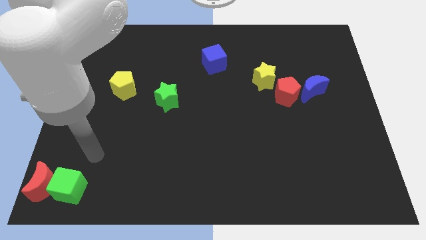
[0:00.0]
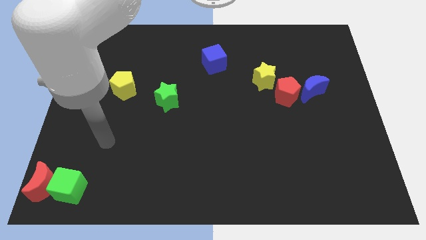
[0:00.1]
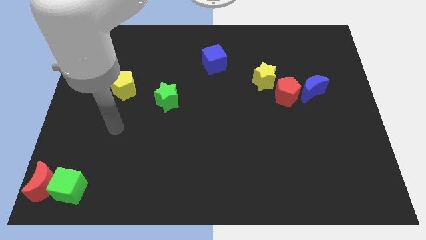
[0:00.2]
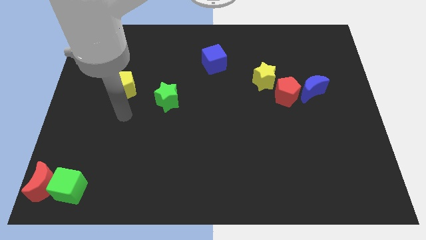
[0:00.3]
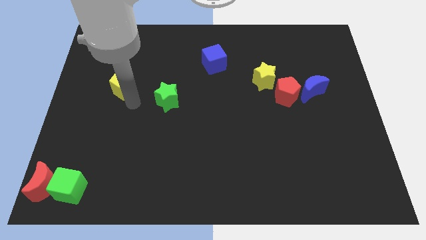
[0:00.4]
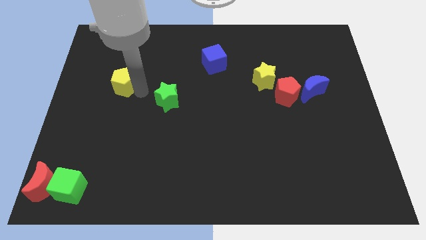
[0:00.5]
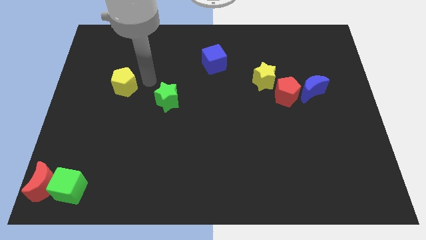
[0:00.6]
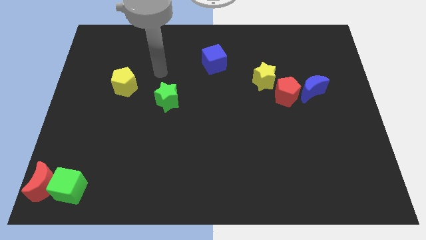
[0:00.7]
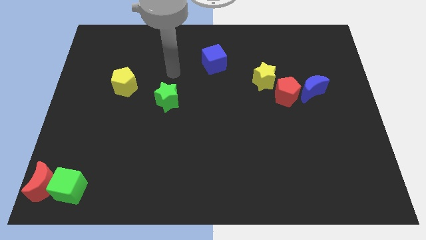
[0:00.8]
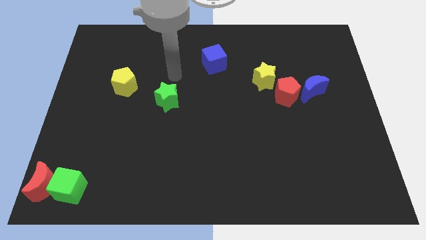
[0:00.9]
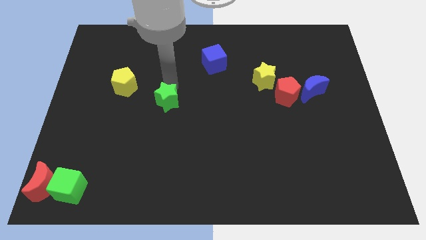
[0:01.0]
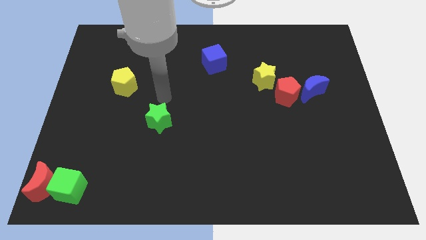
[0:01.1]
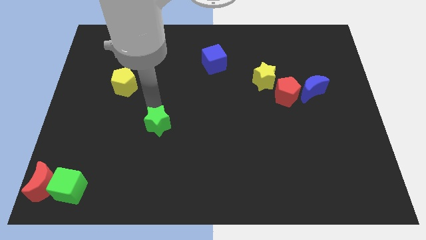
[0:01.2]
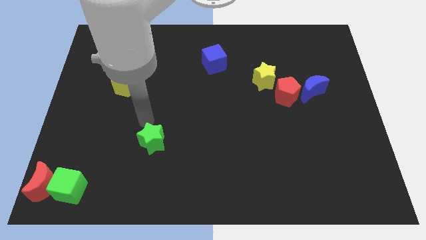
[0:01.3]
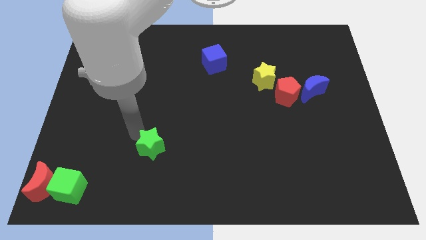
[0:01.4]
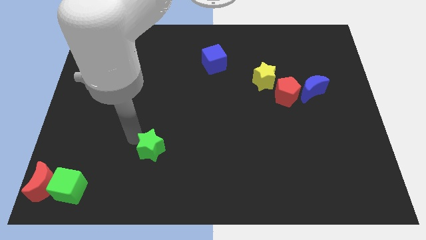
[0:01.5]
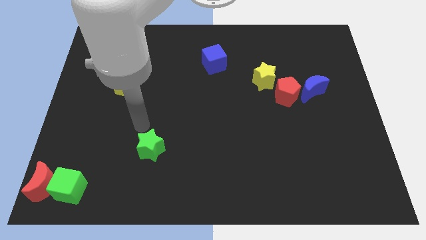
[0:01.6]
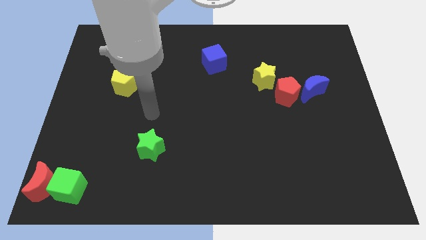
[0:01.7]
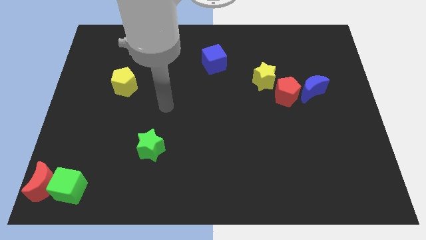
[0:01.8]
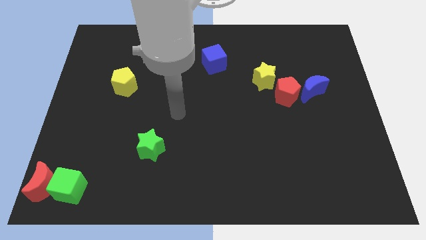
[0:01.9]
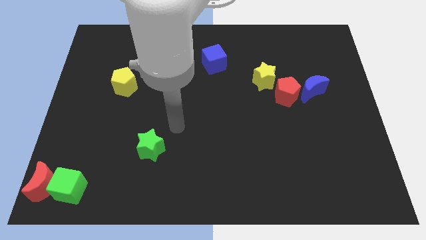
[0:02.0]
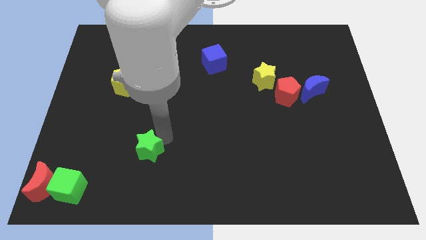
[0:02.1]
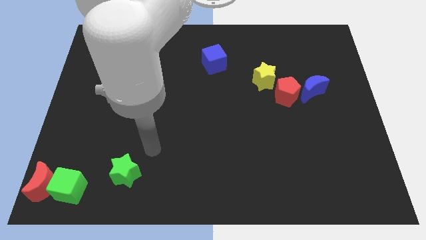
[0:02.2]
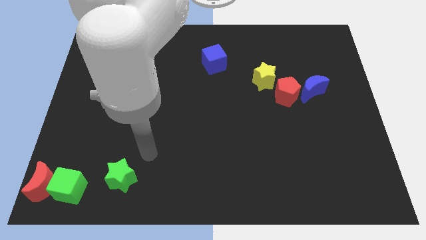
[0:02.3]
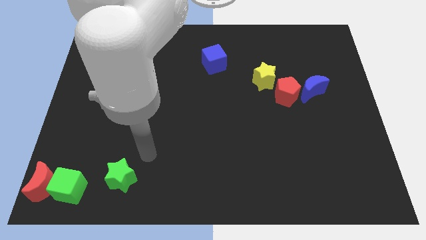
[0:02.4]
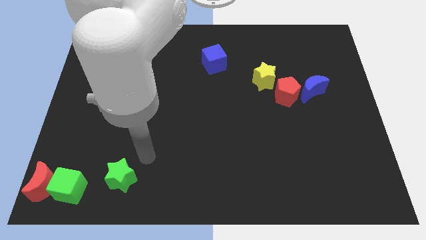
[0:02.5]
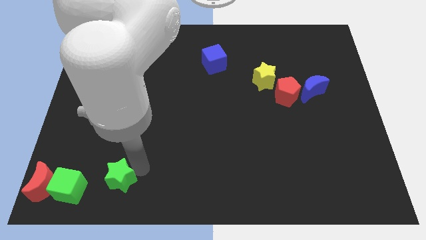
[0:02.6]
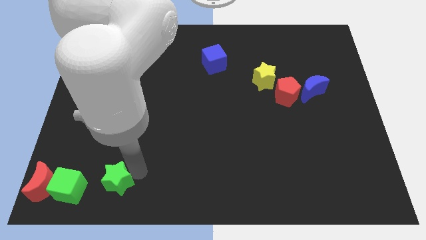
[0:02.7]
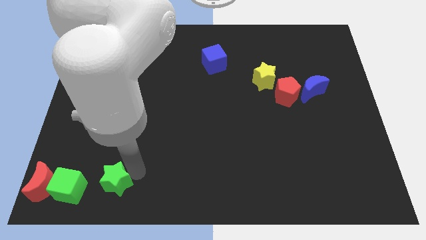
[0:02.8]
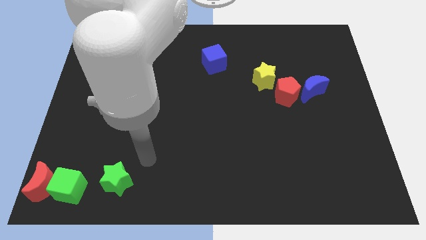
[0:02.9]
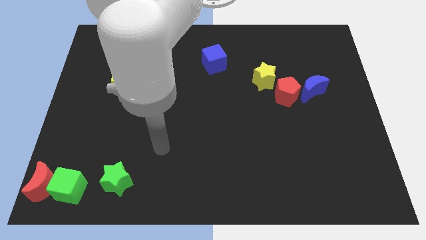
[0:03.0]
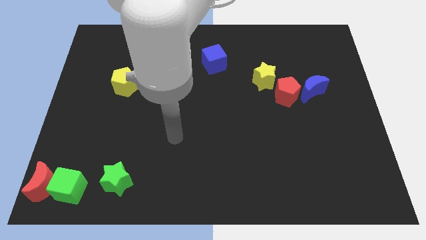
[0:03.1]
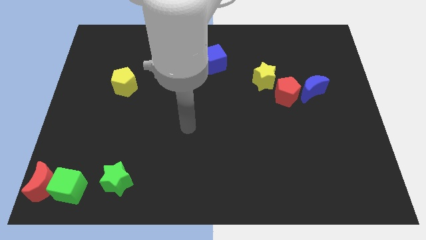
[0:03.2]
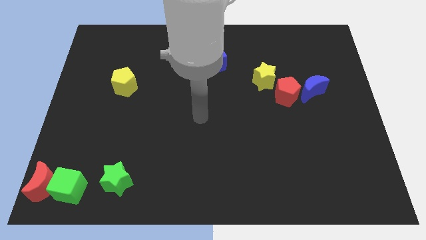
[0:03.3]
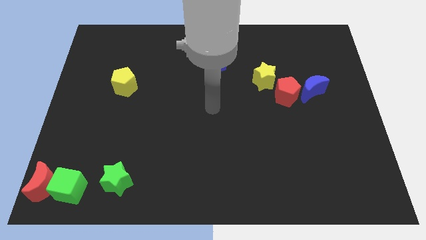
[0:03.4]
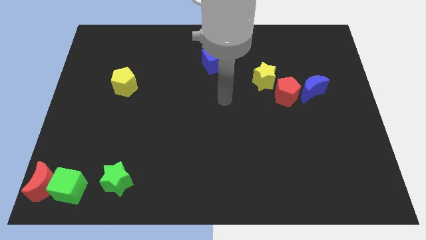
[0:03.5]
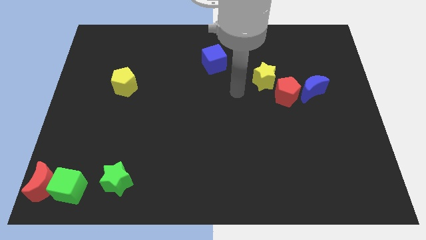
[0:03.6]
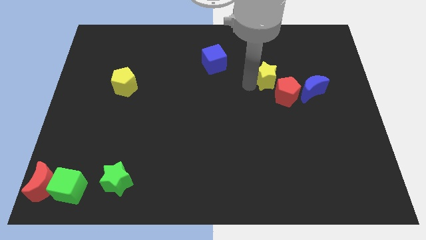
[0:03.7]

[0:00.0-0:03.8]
place the green star right to the green cube

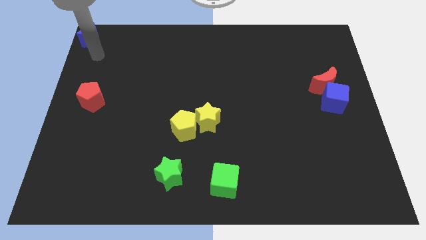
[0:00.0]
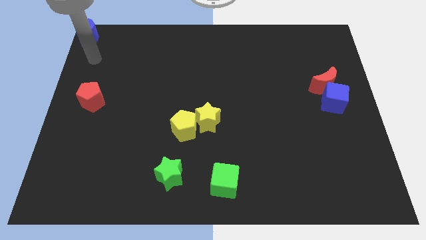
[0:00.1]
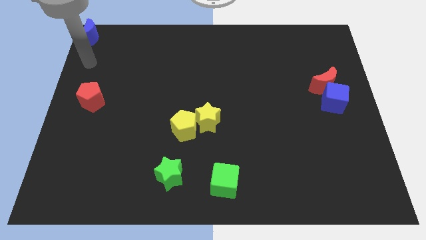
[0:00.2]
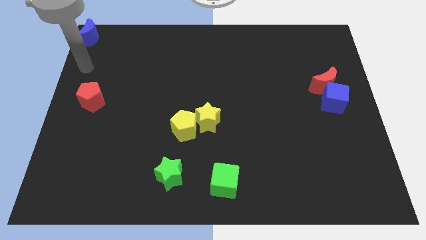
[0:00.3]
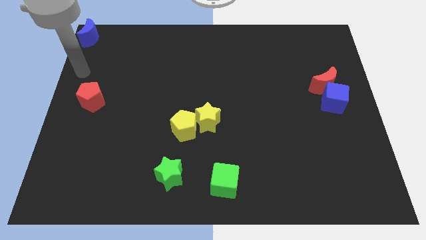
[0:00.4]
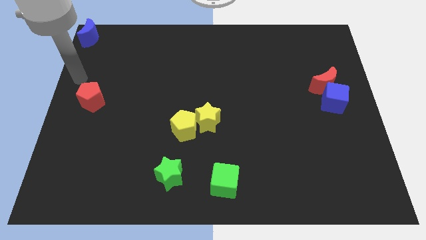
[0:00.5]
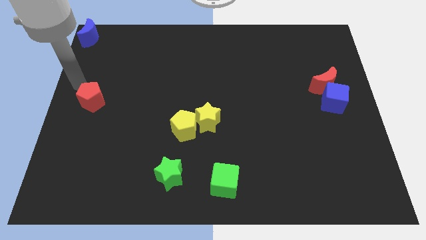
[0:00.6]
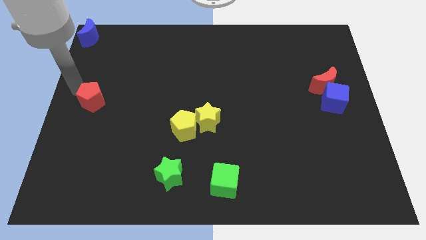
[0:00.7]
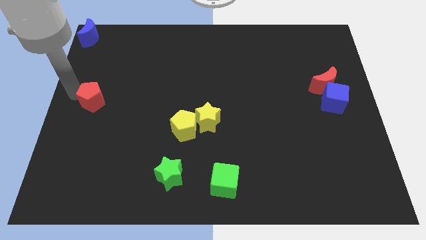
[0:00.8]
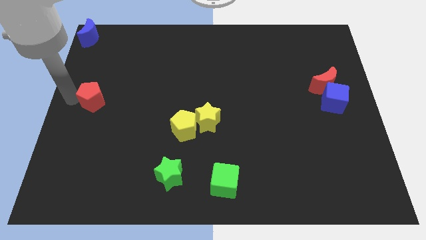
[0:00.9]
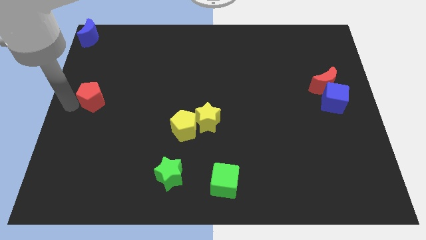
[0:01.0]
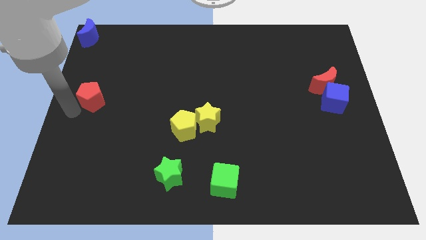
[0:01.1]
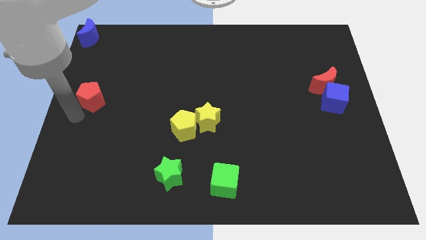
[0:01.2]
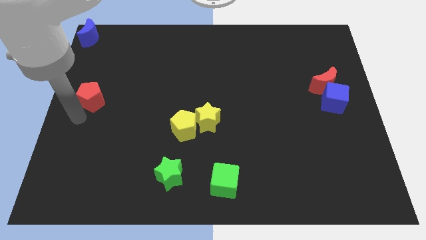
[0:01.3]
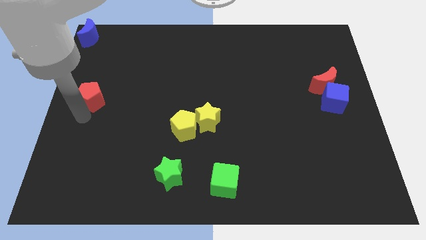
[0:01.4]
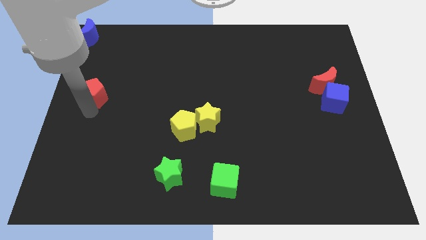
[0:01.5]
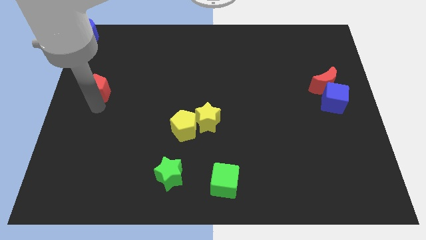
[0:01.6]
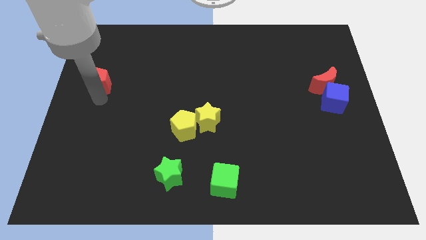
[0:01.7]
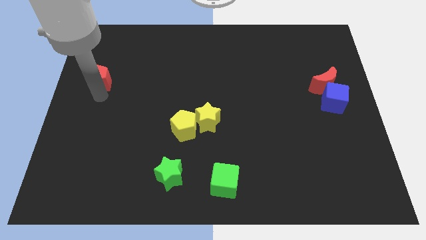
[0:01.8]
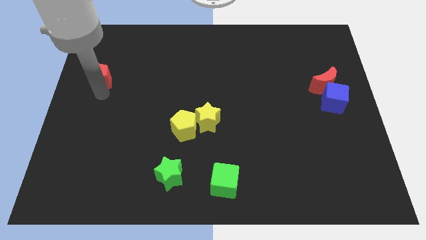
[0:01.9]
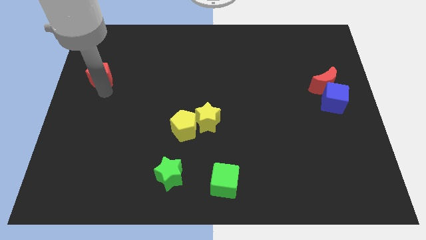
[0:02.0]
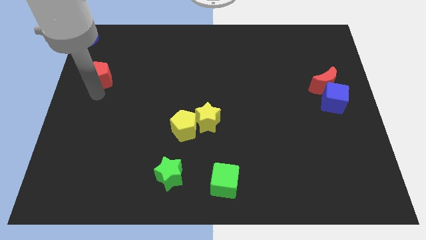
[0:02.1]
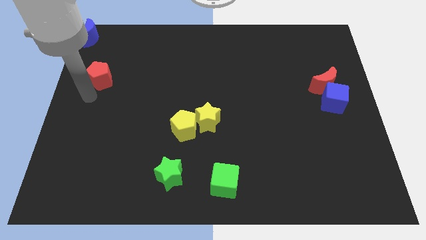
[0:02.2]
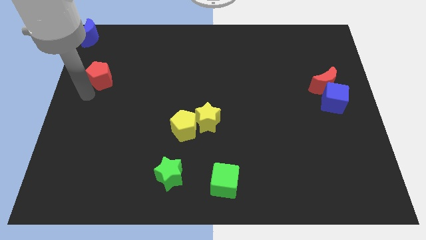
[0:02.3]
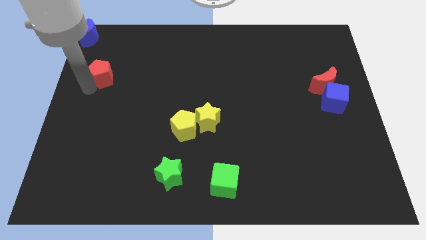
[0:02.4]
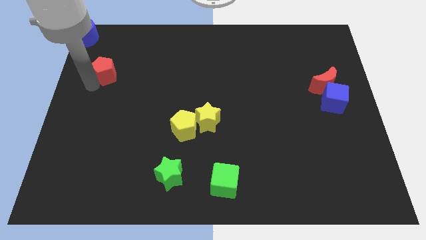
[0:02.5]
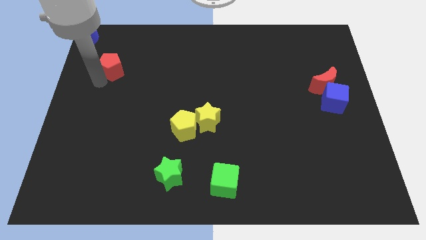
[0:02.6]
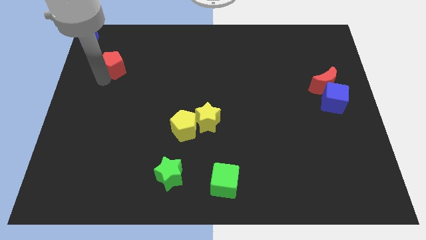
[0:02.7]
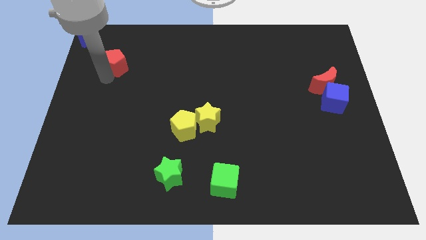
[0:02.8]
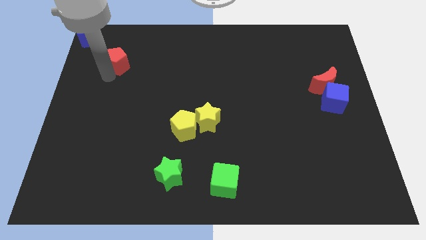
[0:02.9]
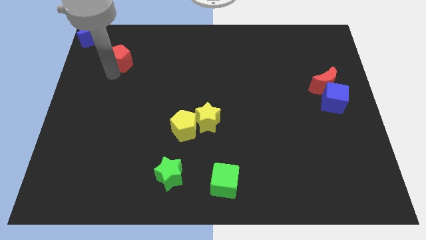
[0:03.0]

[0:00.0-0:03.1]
place the red pentagon to the bottom right of the blue moon

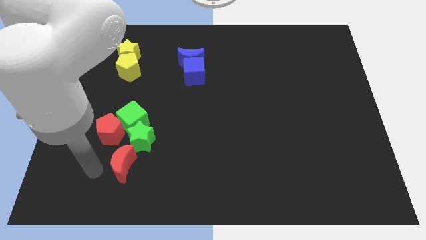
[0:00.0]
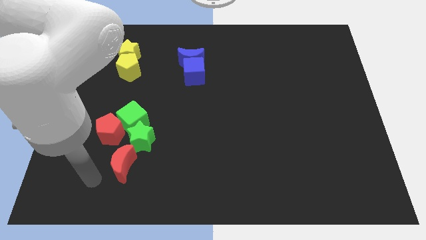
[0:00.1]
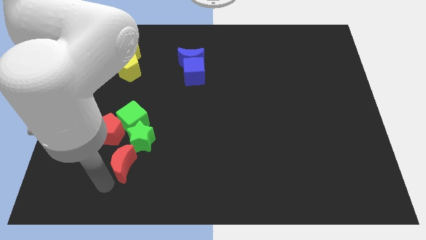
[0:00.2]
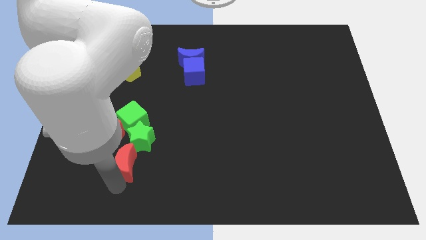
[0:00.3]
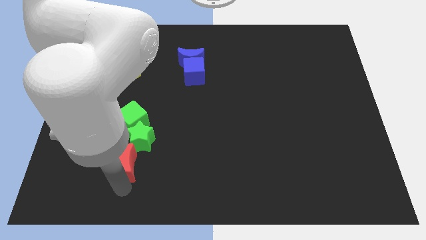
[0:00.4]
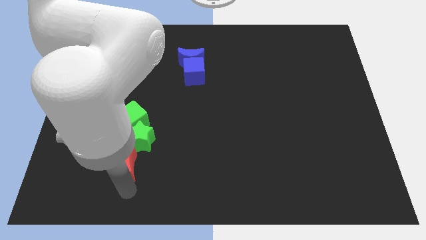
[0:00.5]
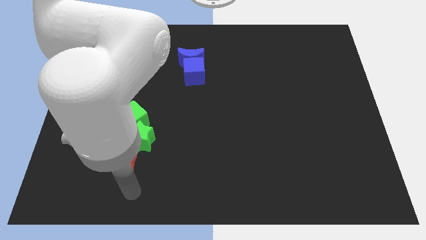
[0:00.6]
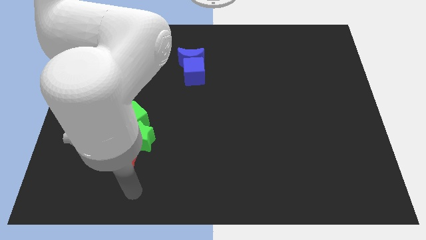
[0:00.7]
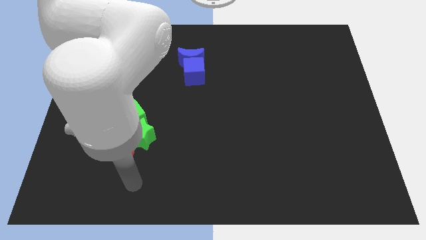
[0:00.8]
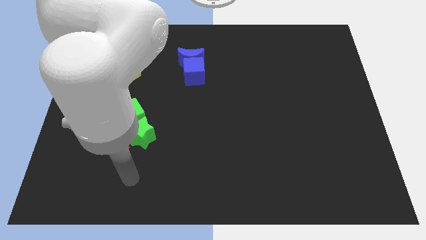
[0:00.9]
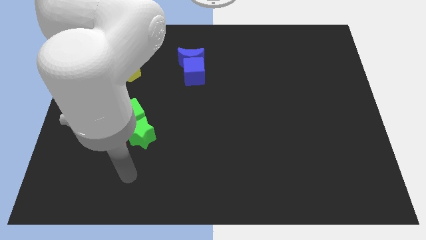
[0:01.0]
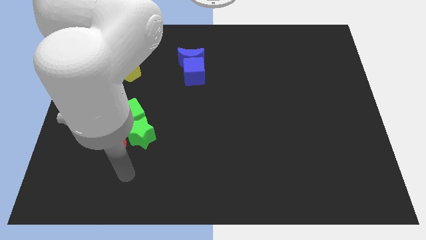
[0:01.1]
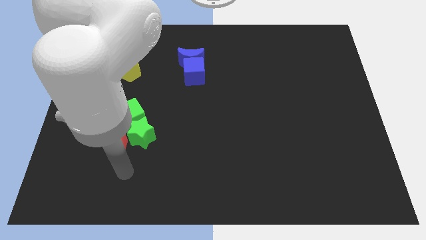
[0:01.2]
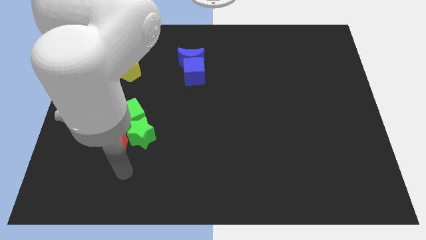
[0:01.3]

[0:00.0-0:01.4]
move the red crescent close to the red pentagon

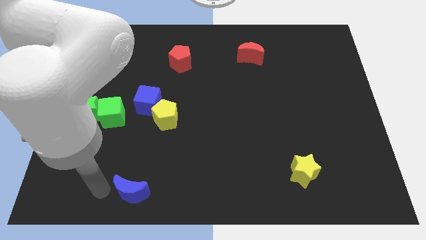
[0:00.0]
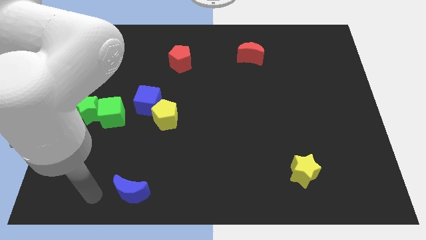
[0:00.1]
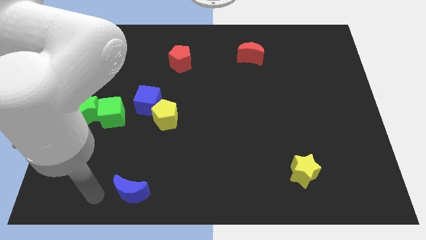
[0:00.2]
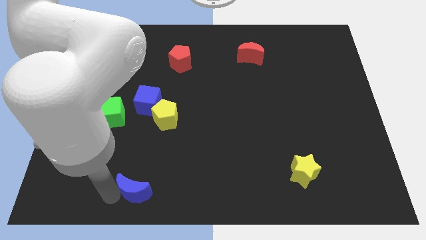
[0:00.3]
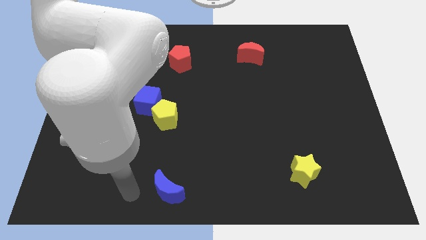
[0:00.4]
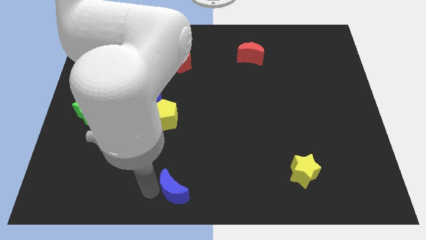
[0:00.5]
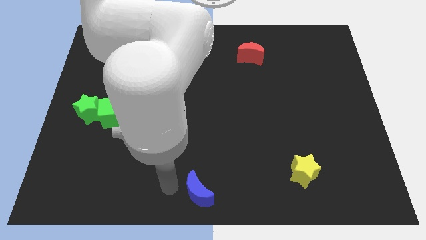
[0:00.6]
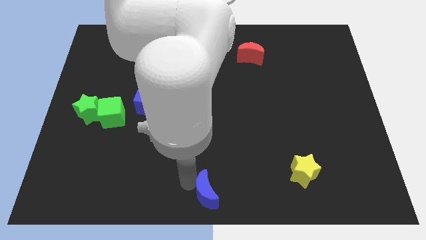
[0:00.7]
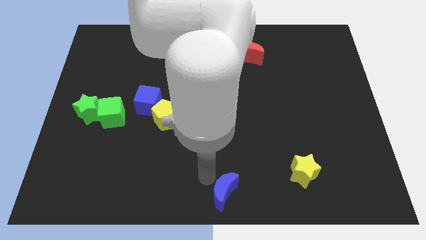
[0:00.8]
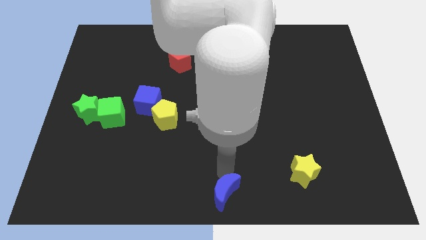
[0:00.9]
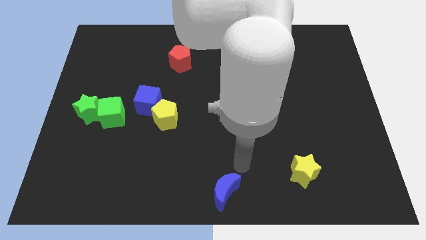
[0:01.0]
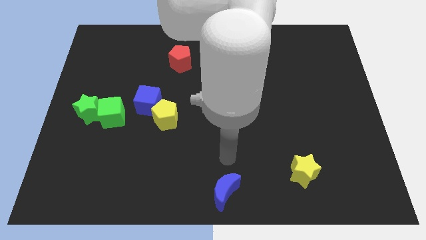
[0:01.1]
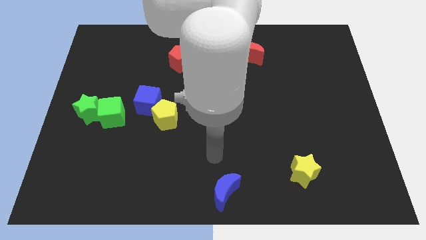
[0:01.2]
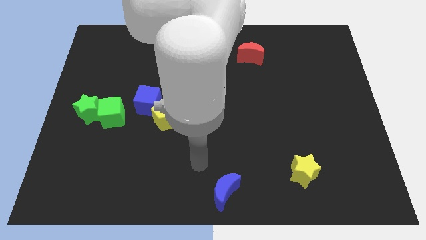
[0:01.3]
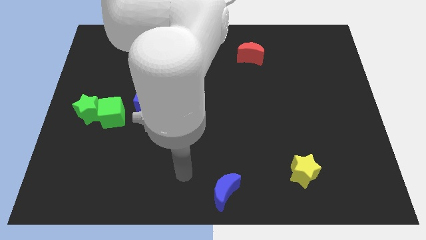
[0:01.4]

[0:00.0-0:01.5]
place the blue crescent at the bottom center of the board
